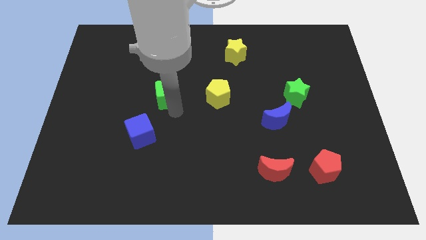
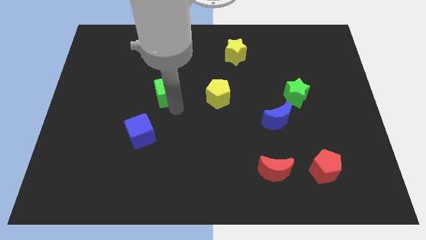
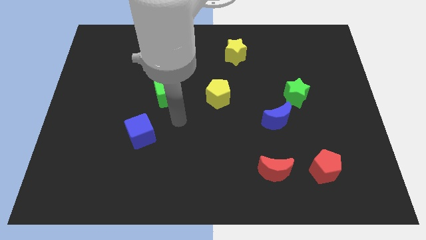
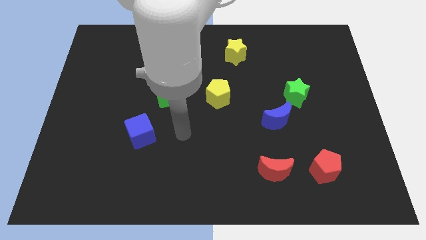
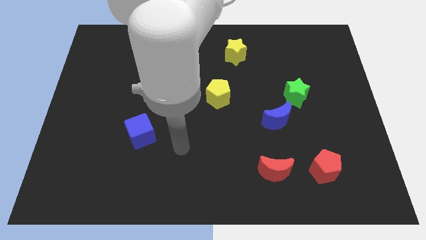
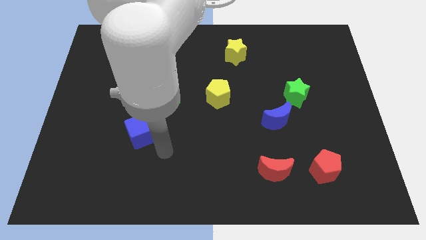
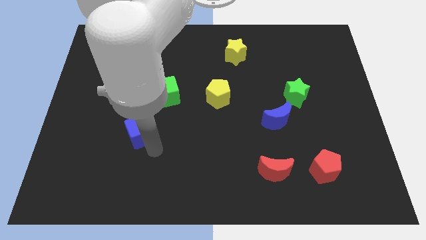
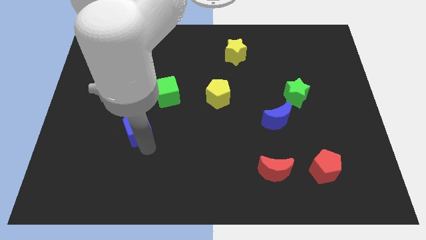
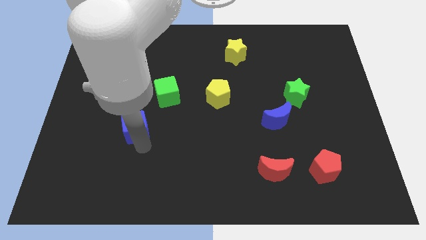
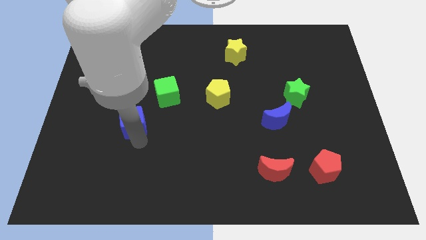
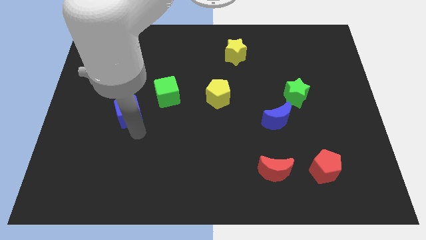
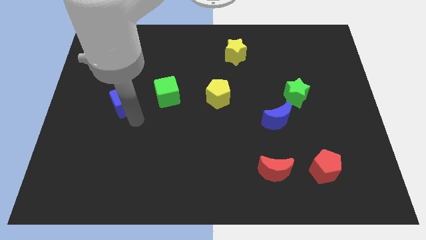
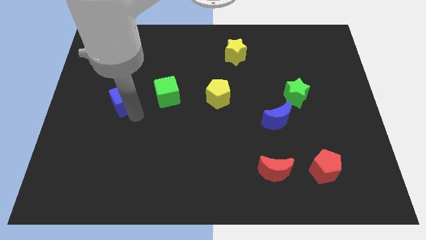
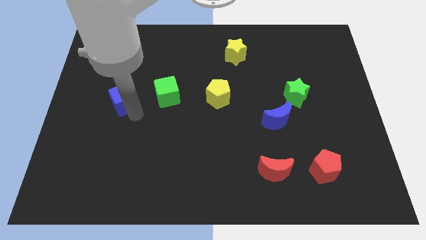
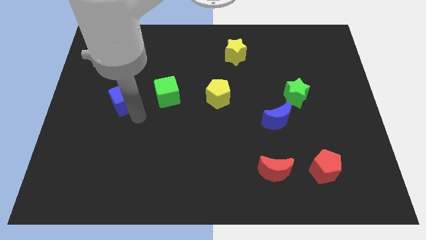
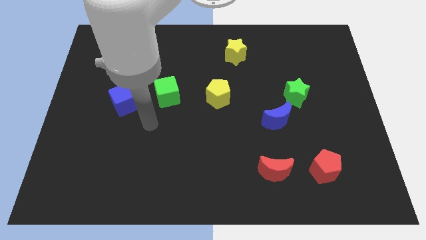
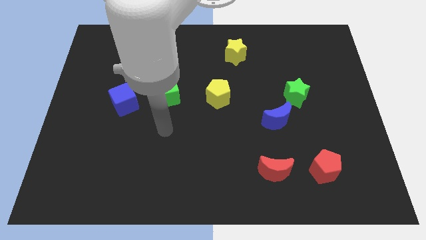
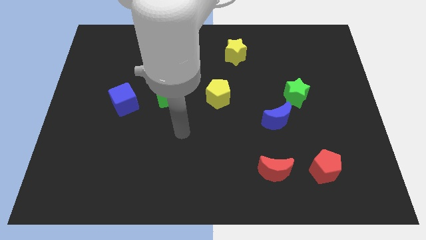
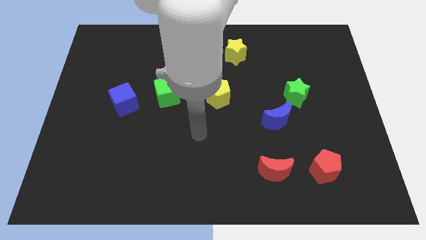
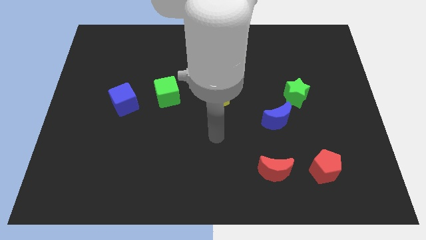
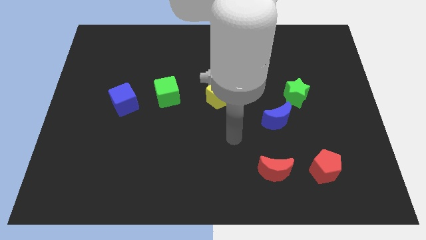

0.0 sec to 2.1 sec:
slide blue cube to the left of green cube

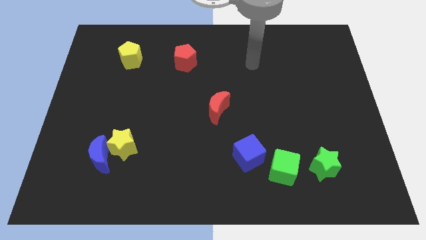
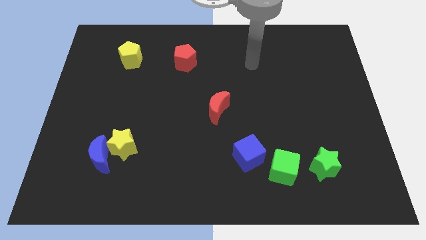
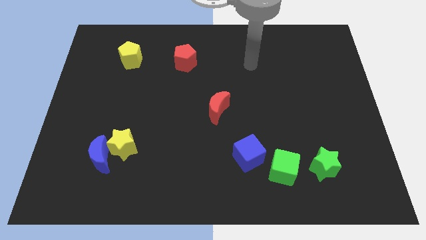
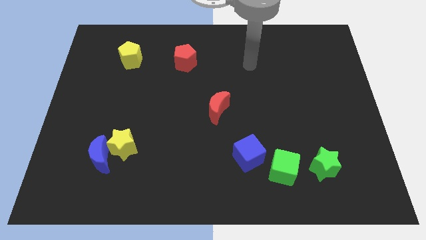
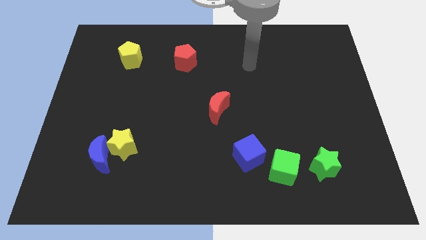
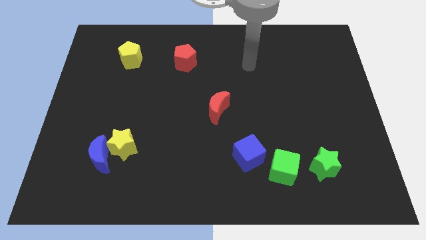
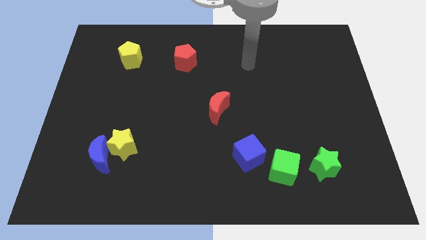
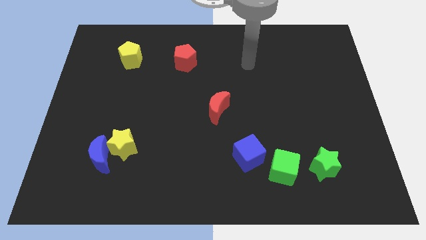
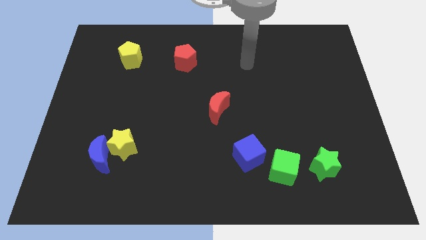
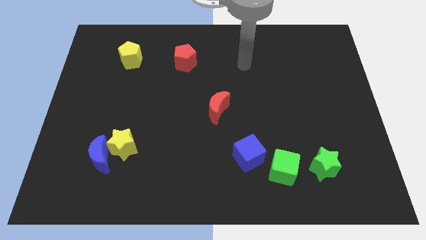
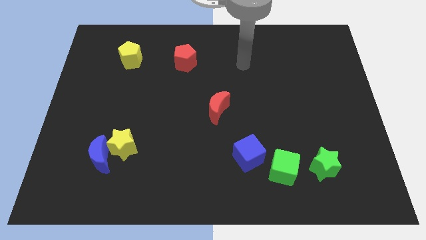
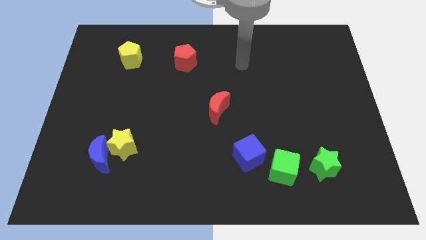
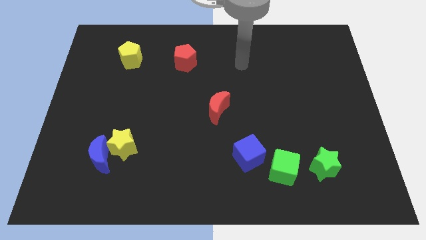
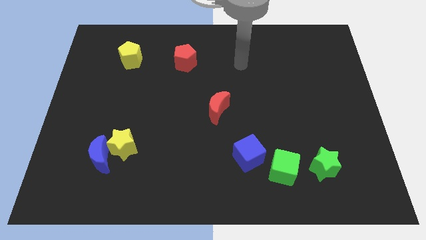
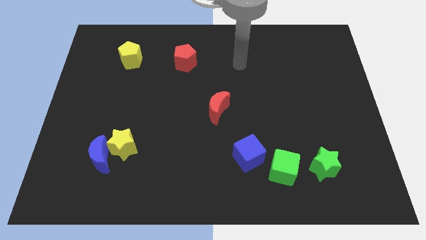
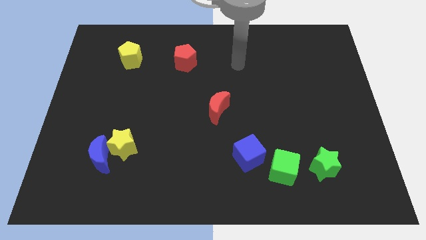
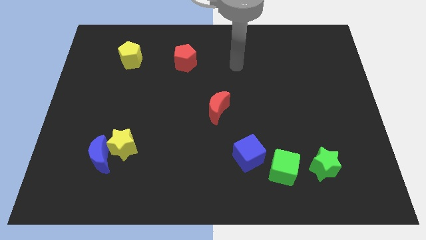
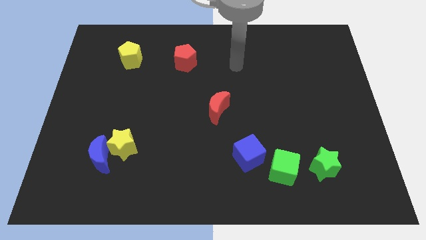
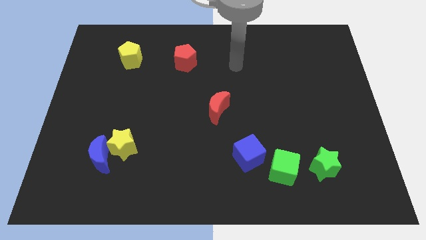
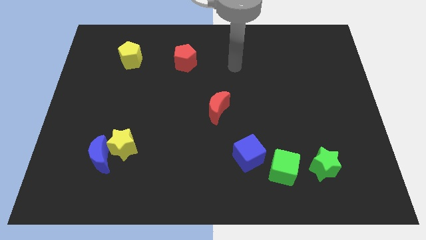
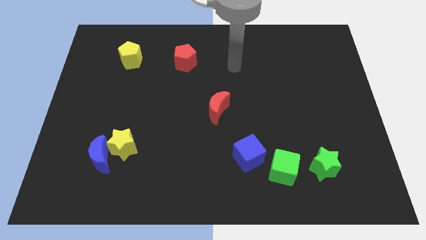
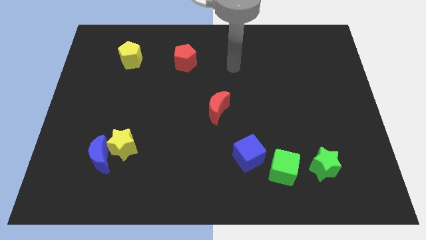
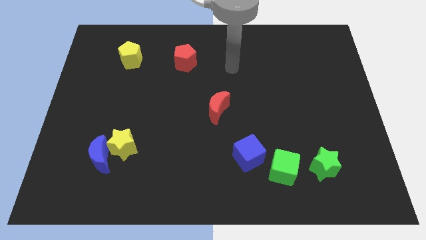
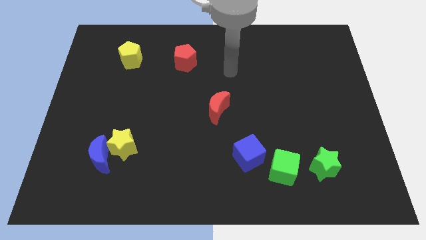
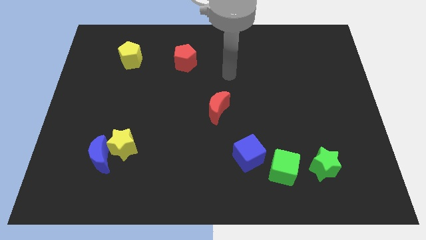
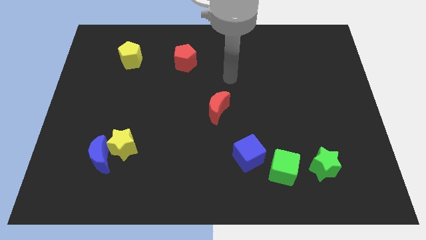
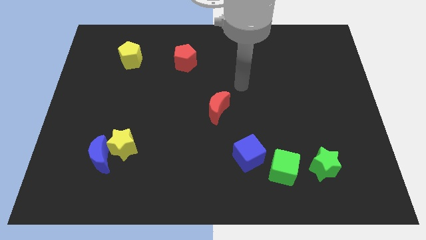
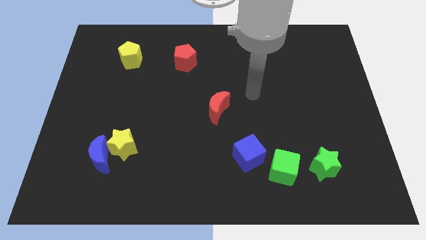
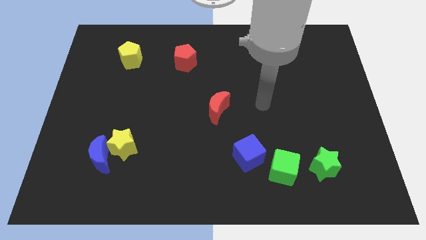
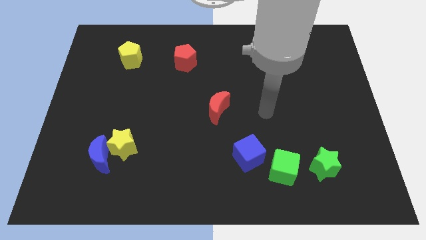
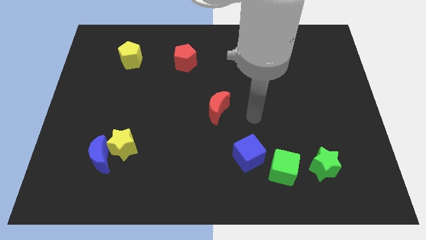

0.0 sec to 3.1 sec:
move your arm to the top side of the blue cube

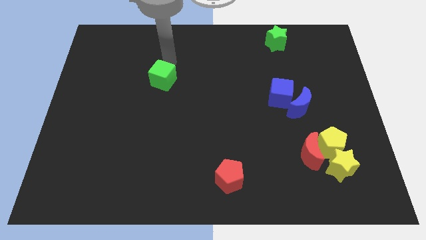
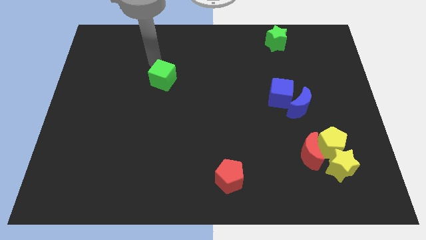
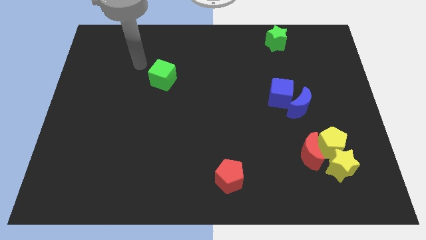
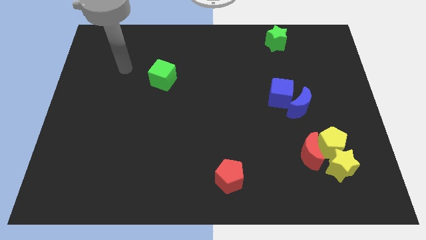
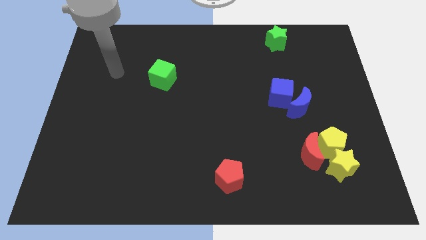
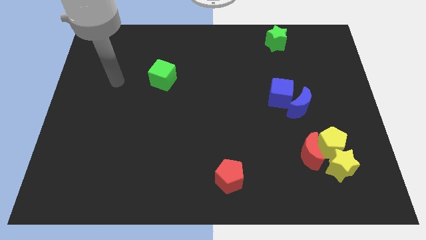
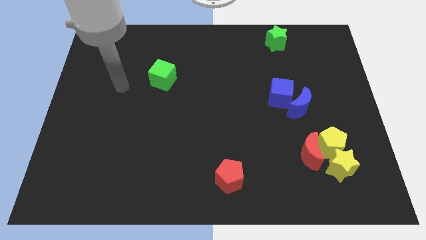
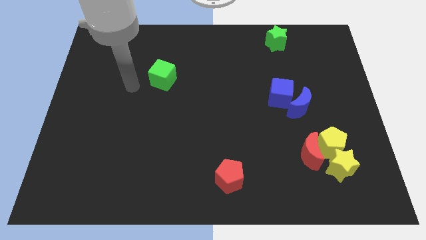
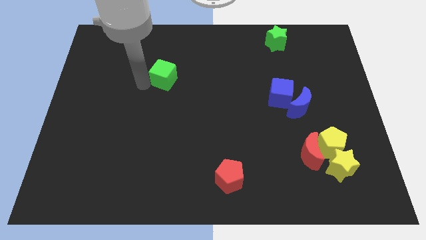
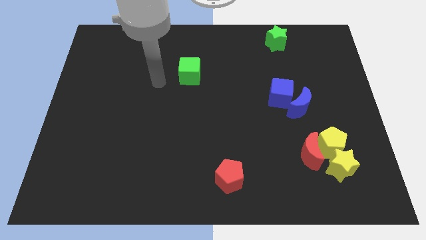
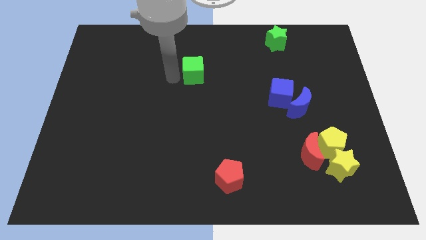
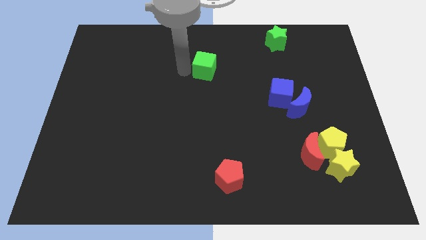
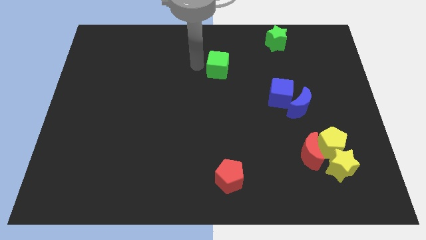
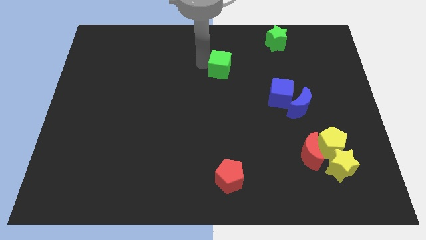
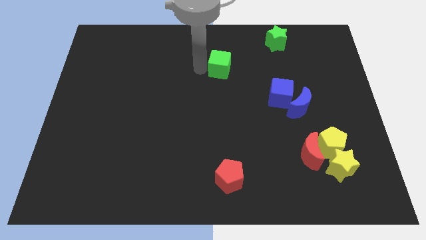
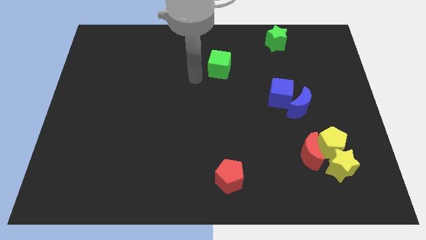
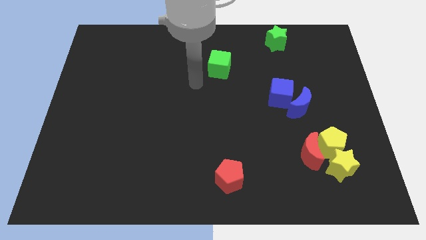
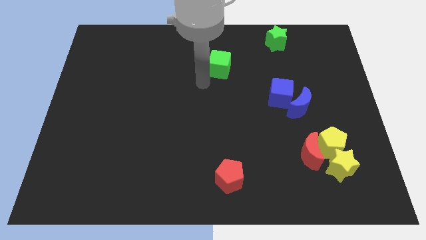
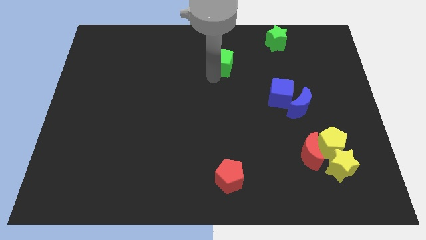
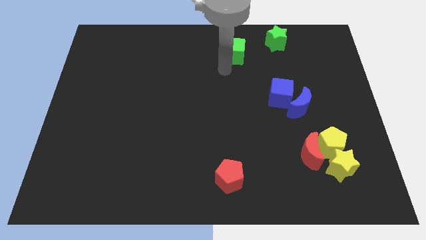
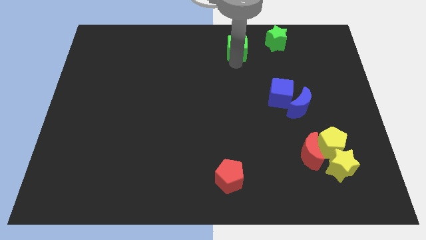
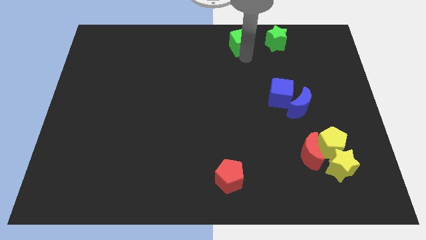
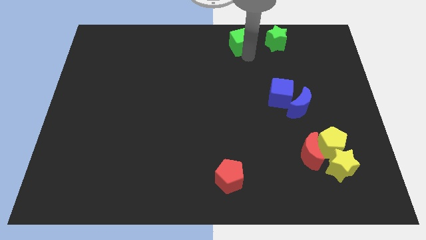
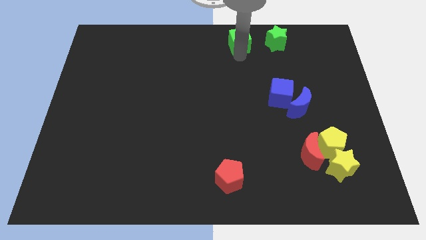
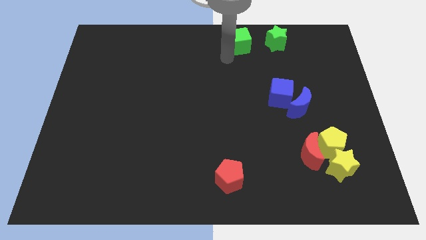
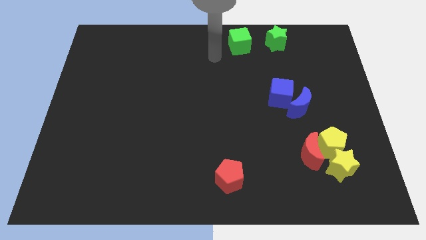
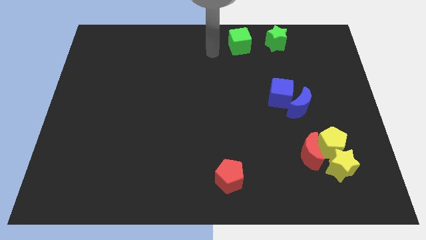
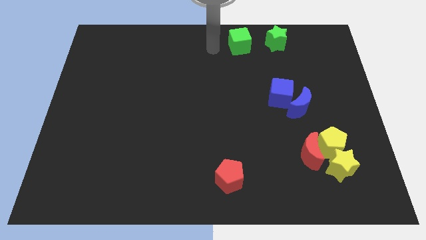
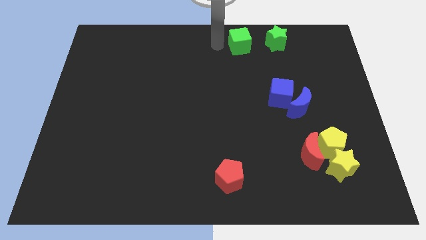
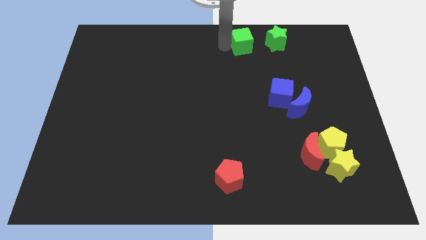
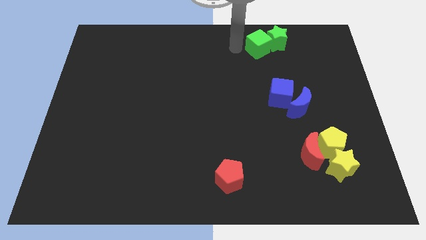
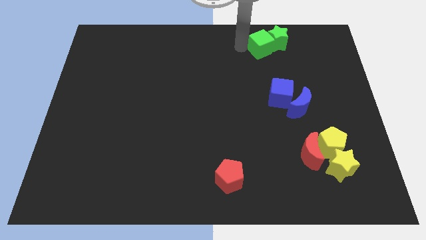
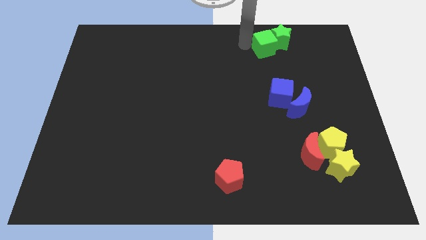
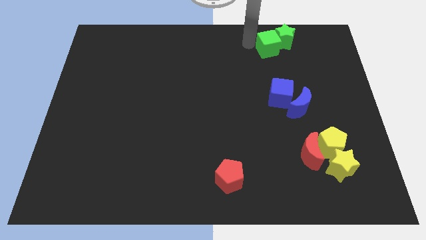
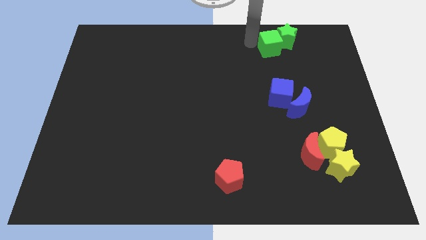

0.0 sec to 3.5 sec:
move the green cube into the green star

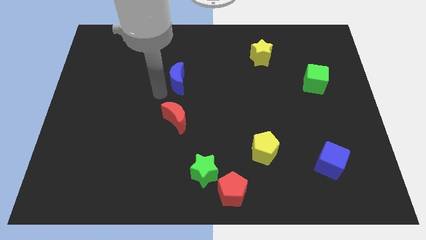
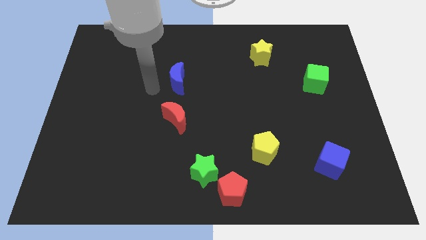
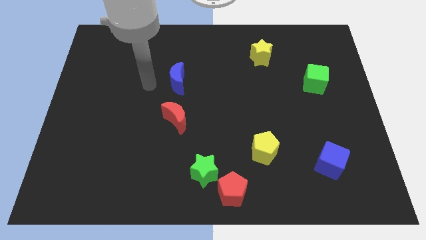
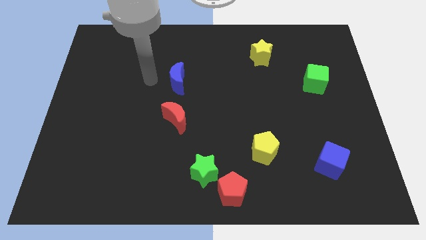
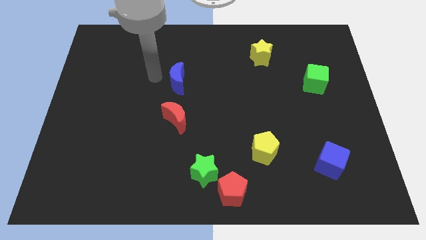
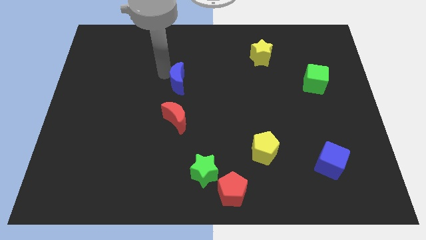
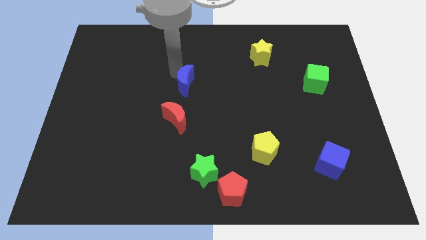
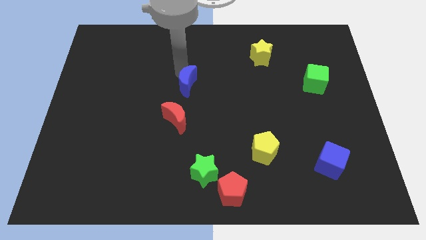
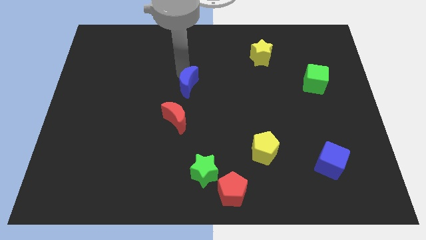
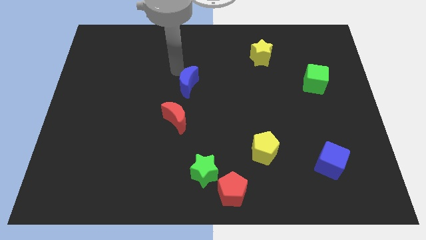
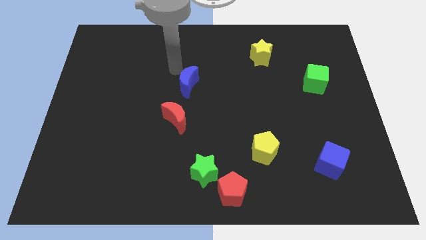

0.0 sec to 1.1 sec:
slightly push the blue crescent towards the top right of the red crescent
